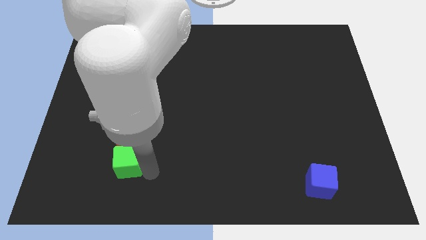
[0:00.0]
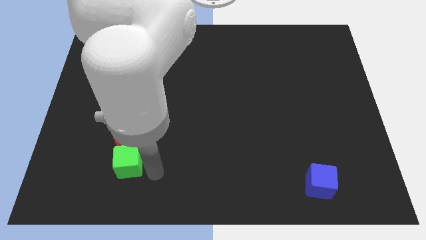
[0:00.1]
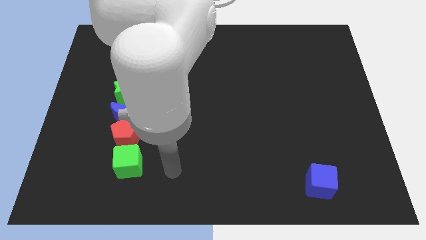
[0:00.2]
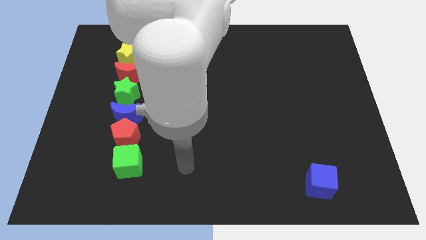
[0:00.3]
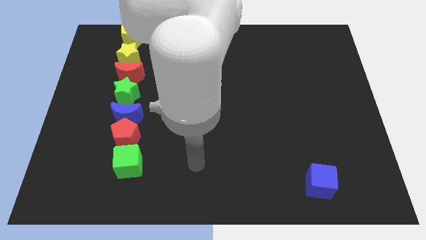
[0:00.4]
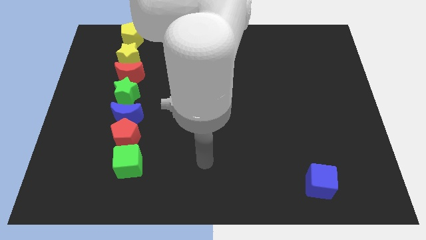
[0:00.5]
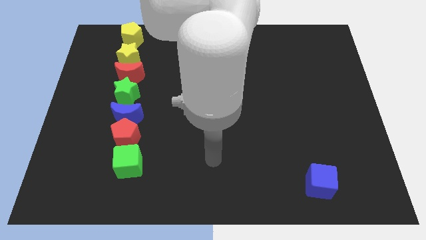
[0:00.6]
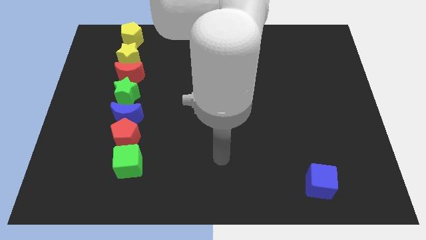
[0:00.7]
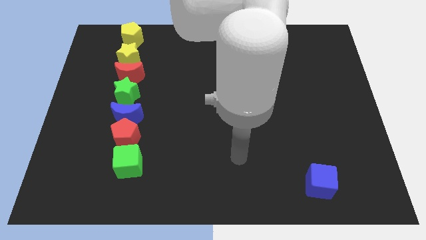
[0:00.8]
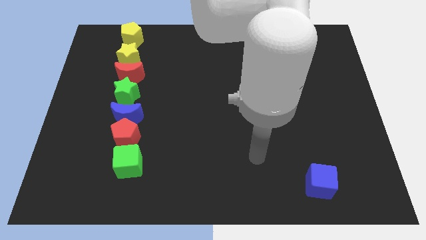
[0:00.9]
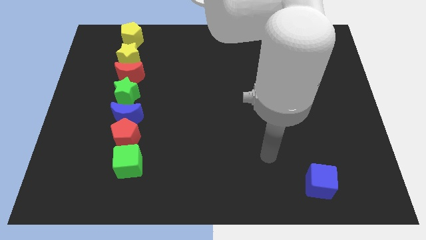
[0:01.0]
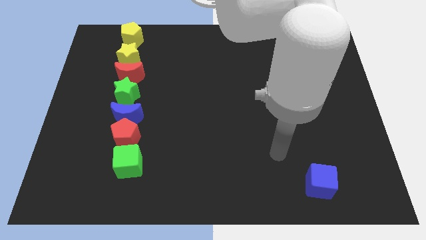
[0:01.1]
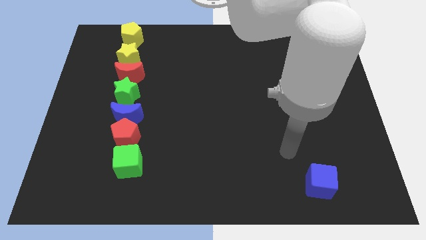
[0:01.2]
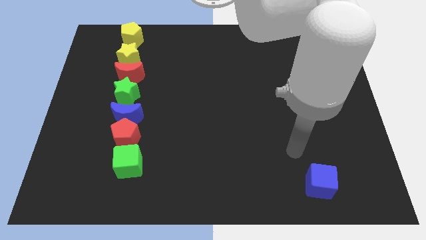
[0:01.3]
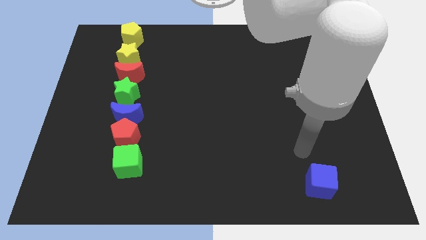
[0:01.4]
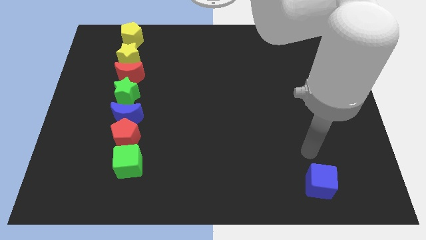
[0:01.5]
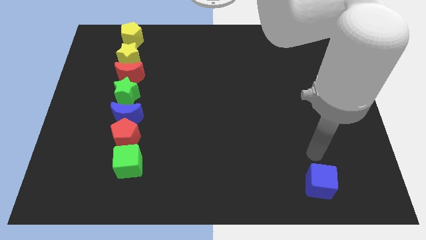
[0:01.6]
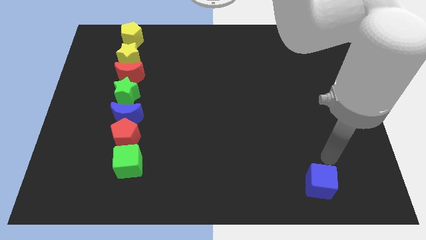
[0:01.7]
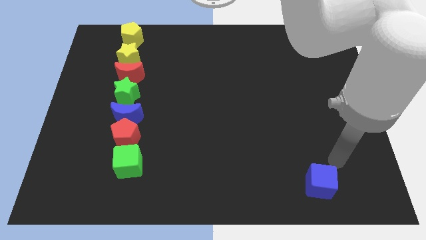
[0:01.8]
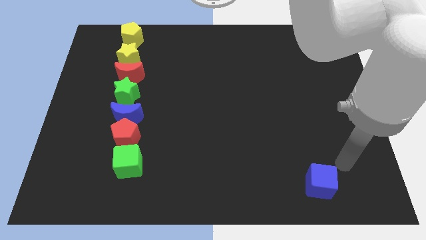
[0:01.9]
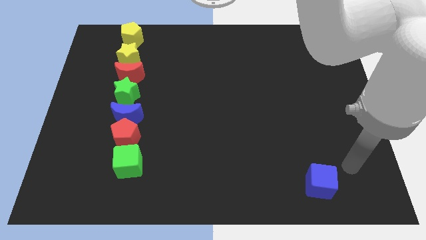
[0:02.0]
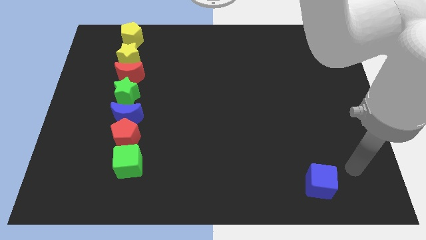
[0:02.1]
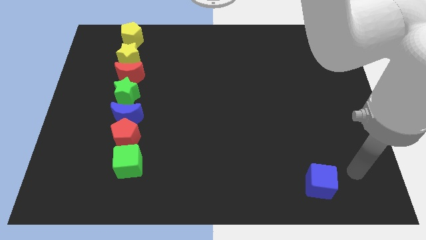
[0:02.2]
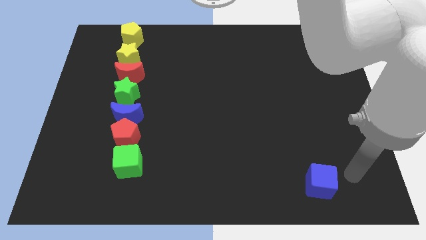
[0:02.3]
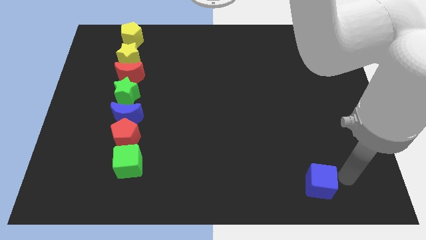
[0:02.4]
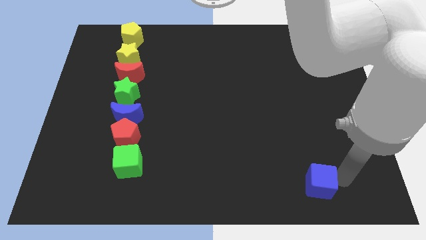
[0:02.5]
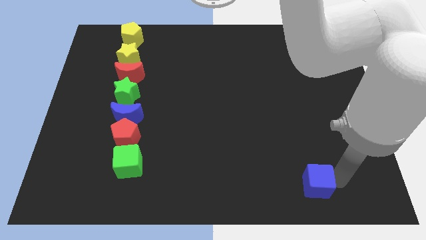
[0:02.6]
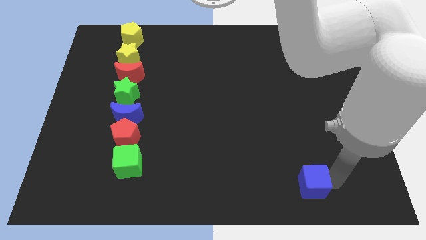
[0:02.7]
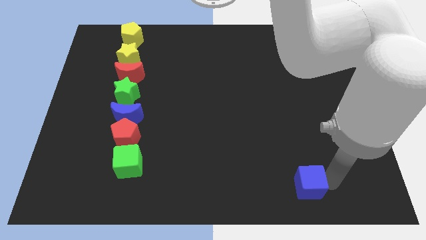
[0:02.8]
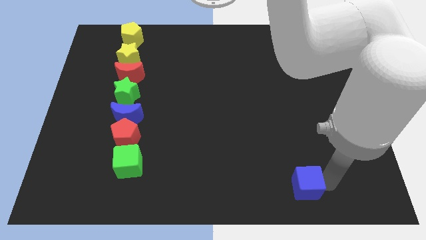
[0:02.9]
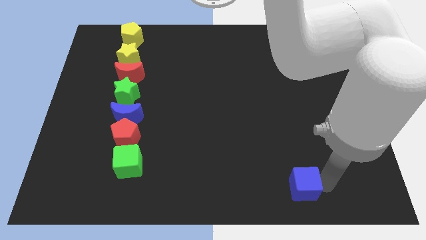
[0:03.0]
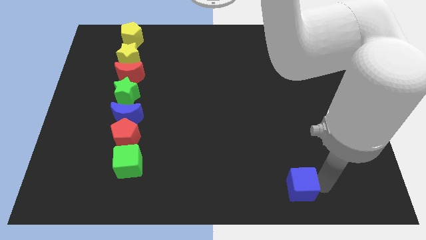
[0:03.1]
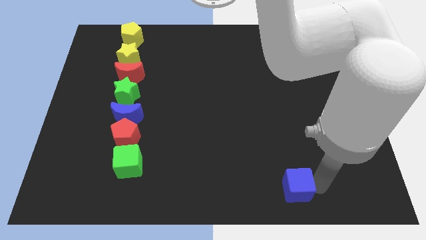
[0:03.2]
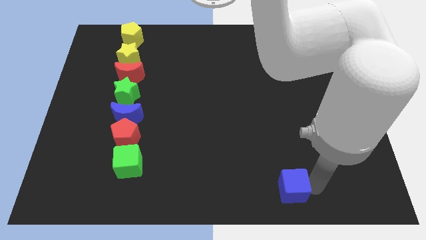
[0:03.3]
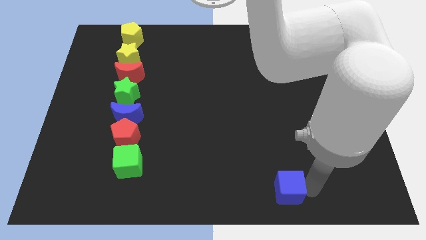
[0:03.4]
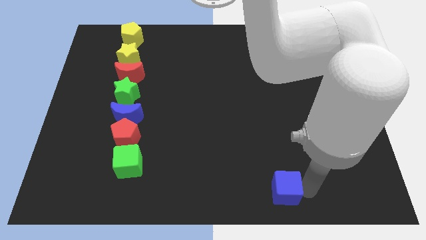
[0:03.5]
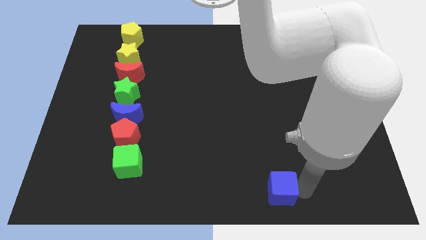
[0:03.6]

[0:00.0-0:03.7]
drag the blue cube towards the bottom center of the board

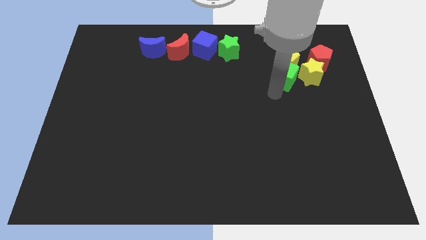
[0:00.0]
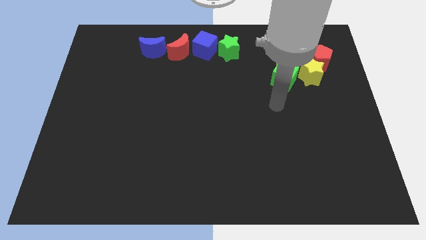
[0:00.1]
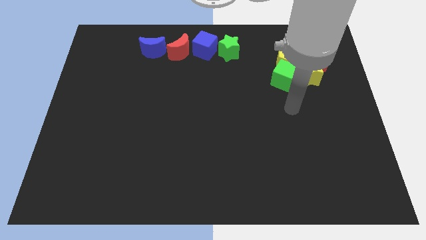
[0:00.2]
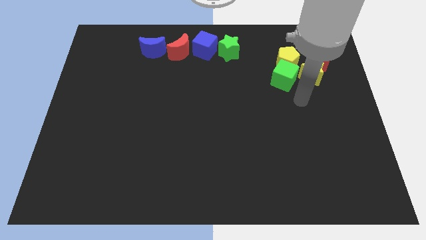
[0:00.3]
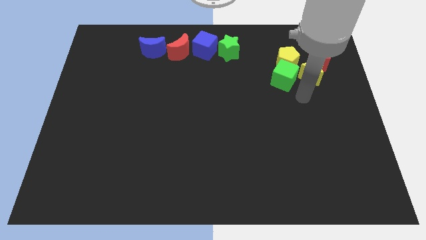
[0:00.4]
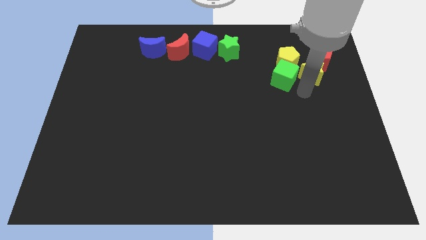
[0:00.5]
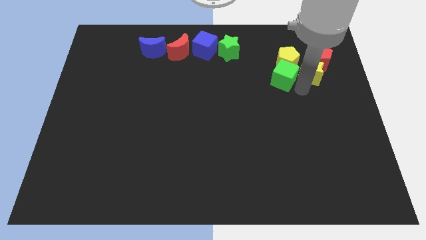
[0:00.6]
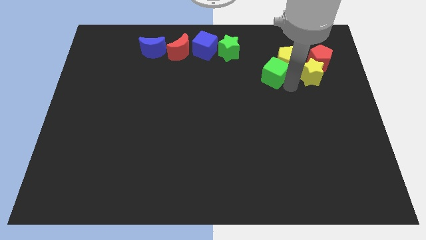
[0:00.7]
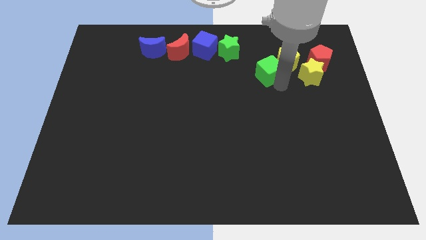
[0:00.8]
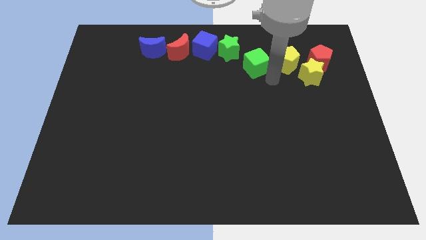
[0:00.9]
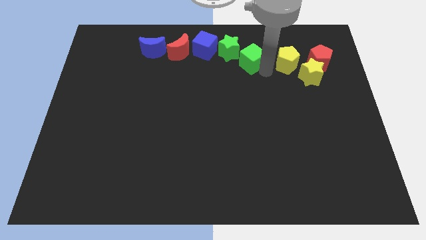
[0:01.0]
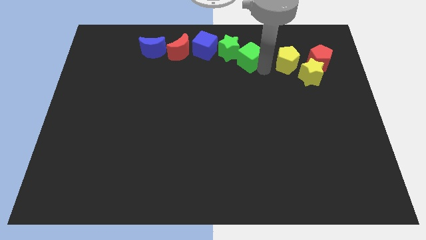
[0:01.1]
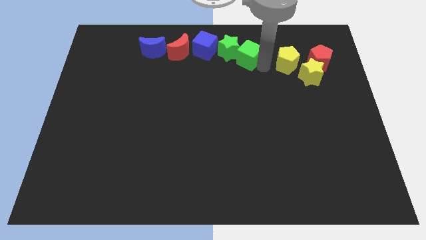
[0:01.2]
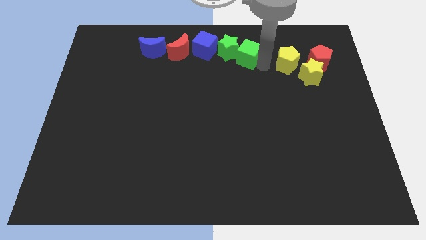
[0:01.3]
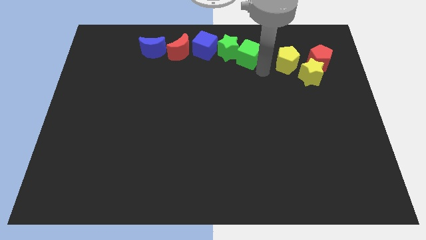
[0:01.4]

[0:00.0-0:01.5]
push the green cube towards the green star

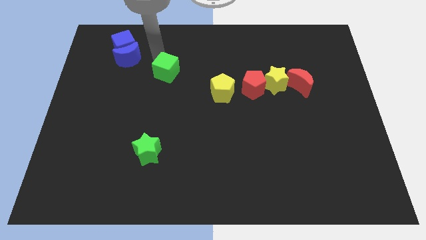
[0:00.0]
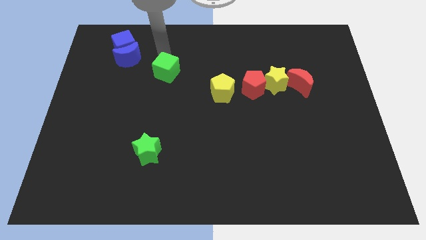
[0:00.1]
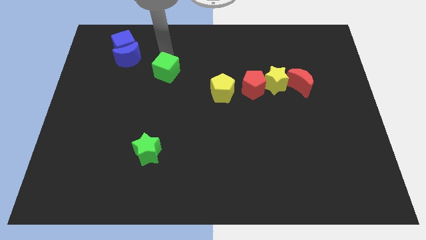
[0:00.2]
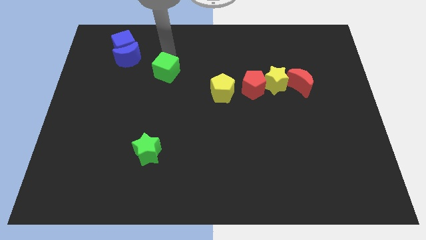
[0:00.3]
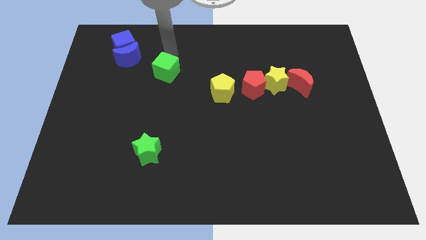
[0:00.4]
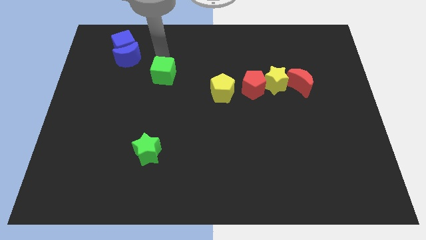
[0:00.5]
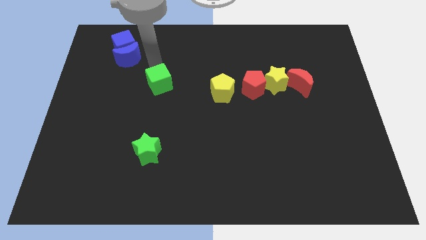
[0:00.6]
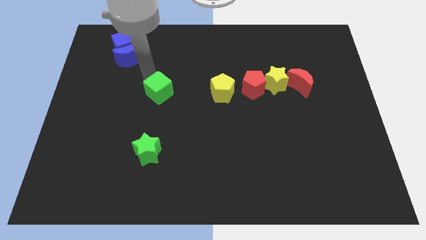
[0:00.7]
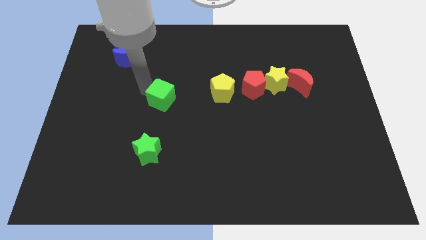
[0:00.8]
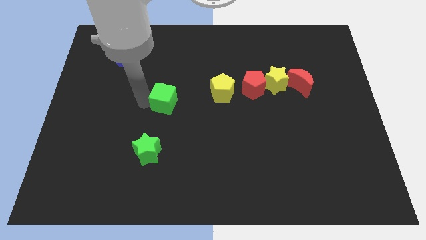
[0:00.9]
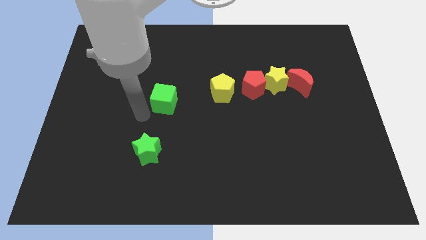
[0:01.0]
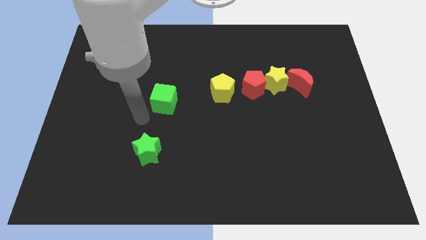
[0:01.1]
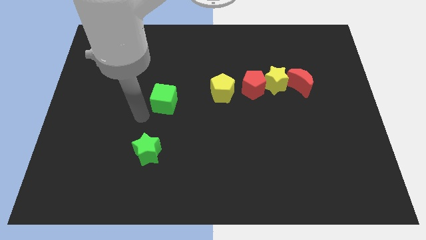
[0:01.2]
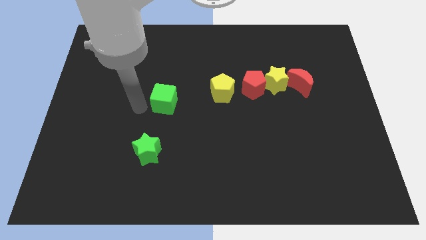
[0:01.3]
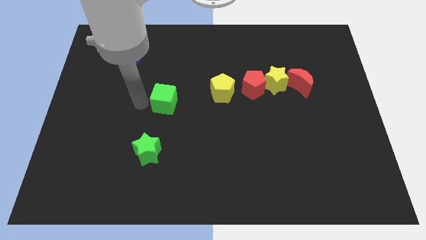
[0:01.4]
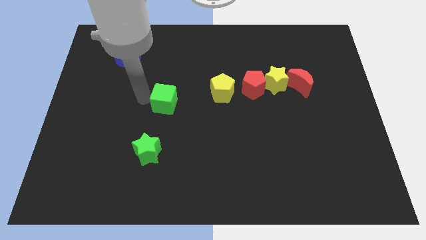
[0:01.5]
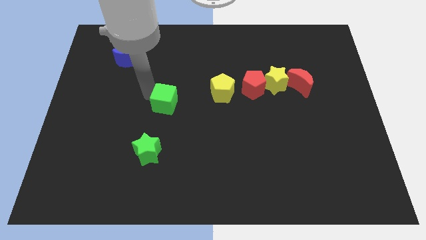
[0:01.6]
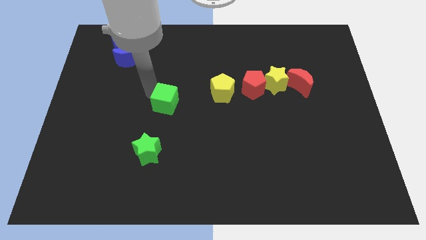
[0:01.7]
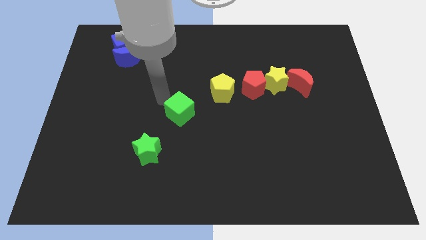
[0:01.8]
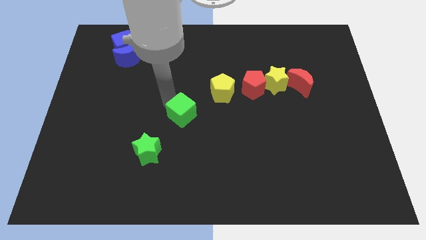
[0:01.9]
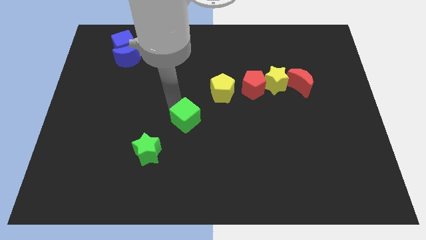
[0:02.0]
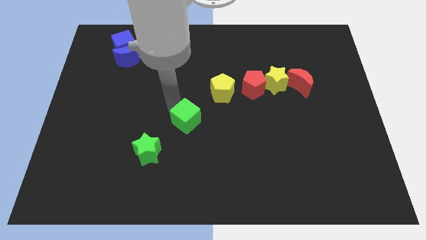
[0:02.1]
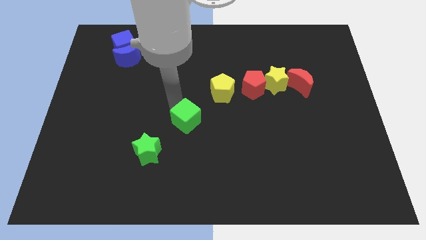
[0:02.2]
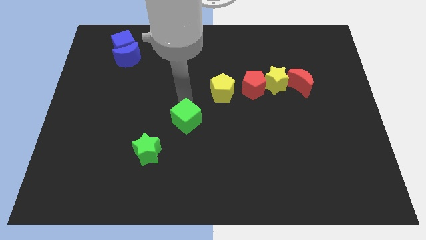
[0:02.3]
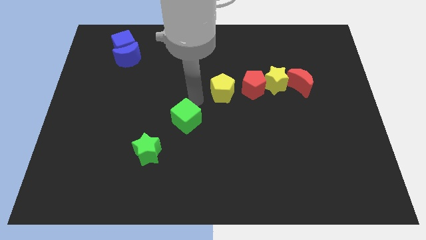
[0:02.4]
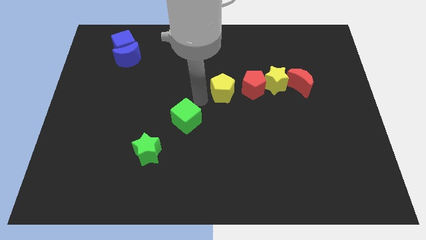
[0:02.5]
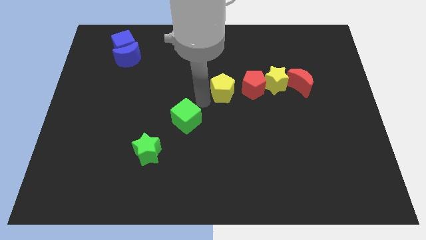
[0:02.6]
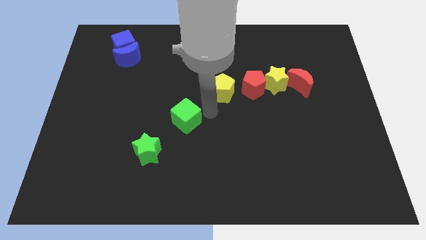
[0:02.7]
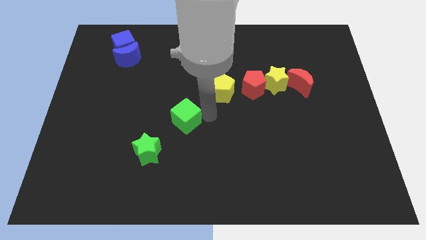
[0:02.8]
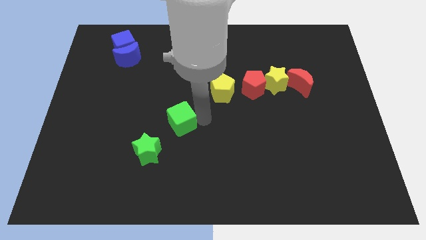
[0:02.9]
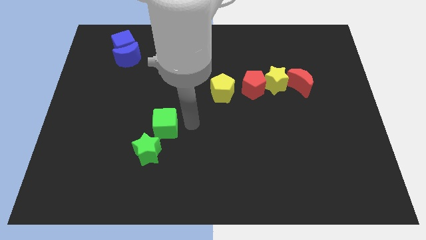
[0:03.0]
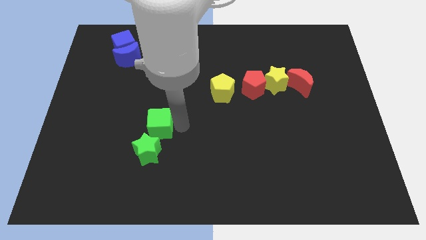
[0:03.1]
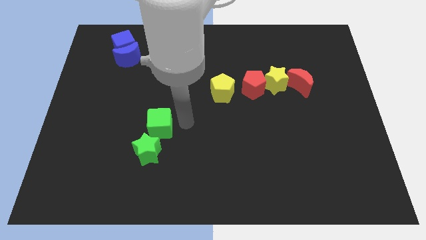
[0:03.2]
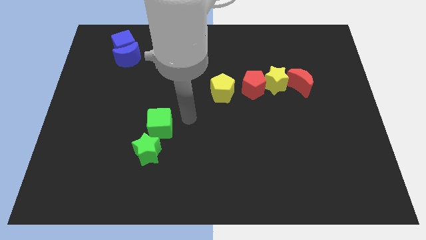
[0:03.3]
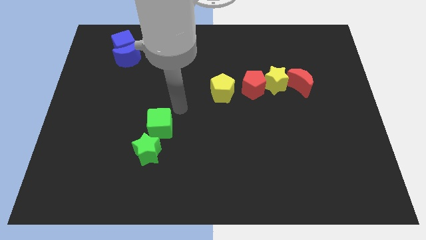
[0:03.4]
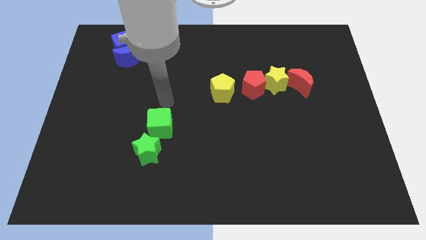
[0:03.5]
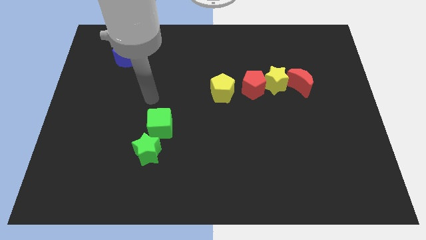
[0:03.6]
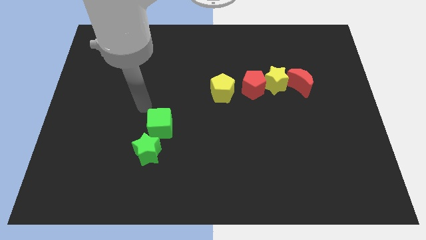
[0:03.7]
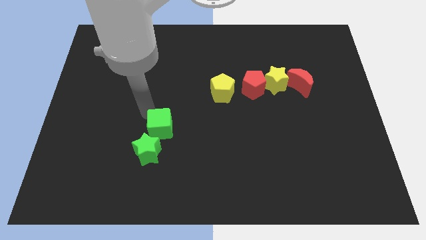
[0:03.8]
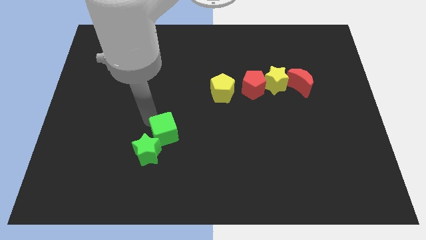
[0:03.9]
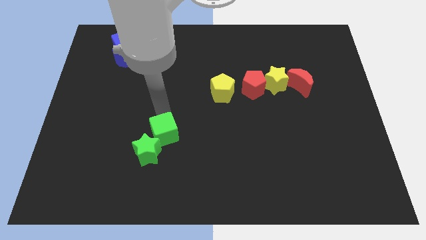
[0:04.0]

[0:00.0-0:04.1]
slide green cube into green star
